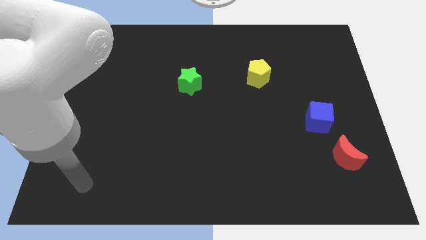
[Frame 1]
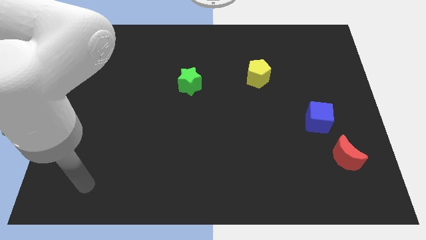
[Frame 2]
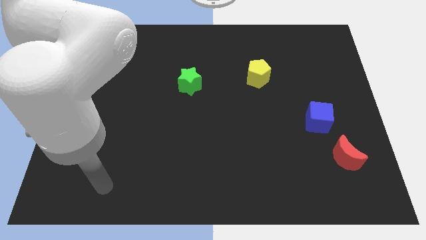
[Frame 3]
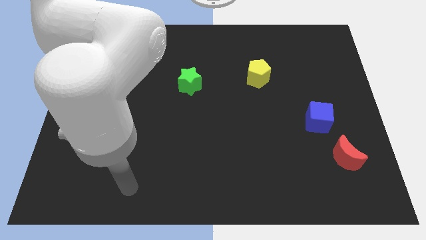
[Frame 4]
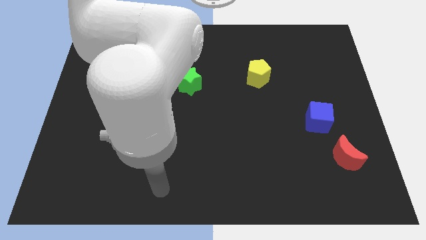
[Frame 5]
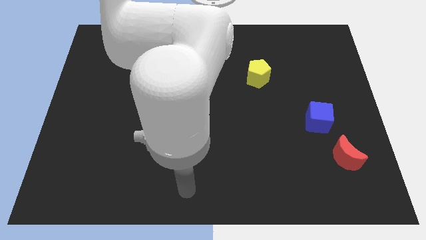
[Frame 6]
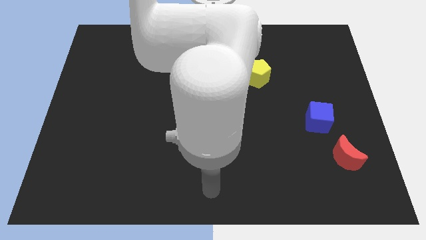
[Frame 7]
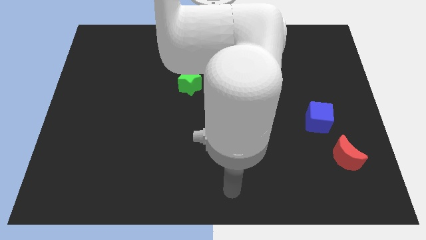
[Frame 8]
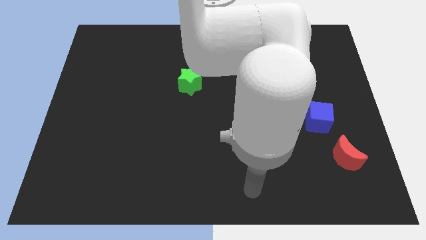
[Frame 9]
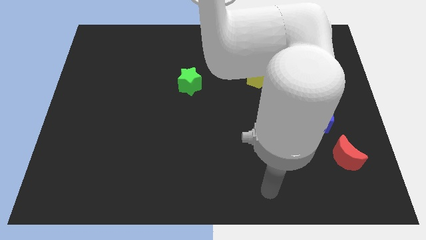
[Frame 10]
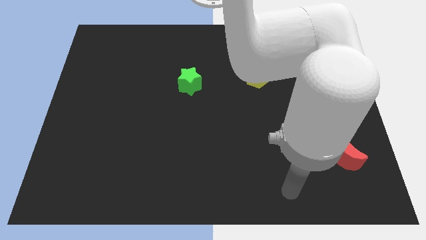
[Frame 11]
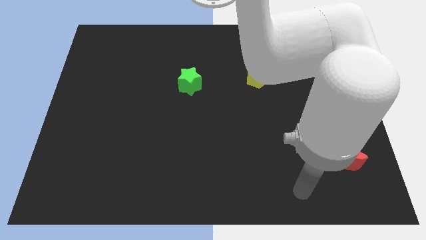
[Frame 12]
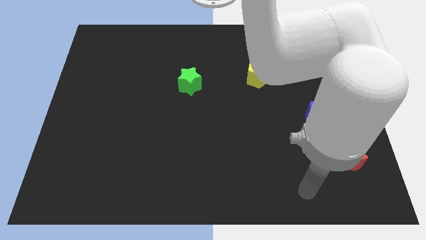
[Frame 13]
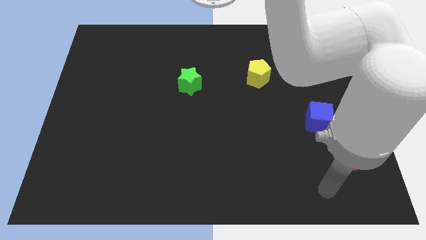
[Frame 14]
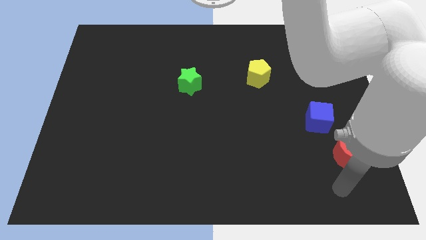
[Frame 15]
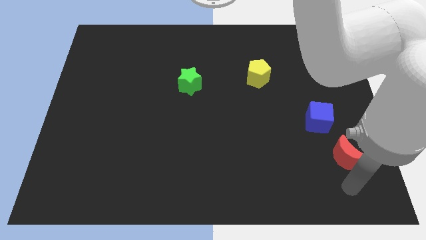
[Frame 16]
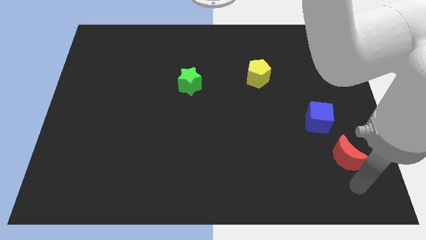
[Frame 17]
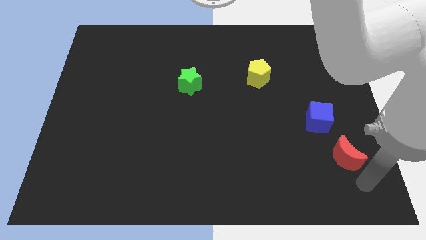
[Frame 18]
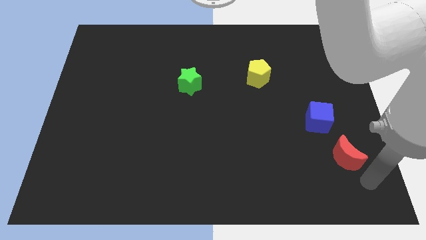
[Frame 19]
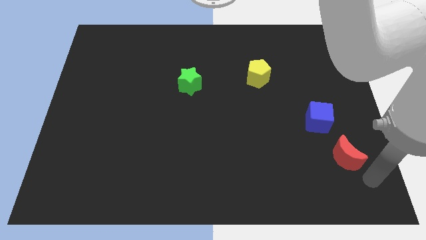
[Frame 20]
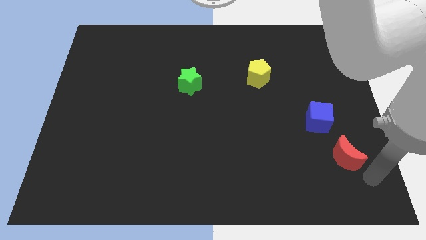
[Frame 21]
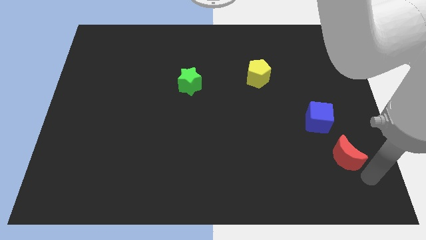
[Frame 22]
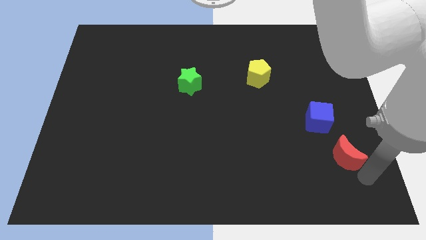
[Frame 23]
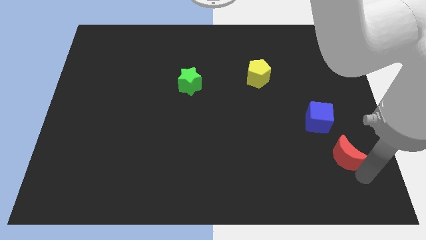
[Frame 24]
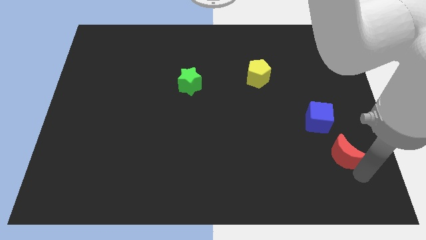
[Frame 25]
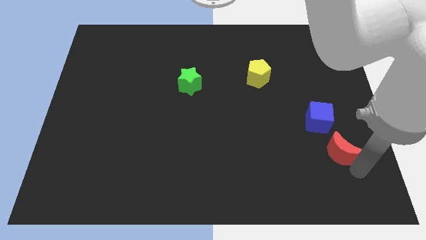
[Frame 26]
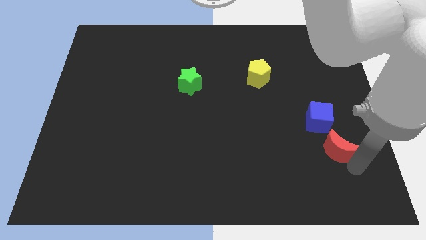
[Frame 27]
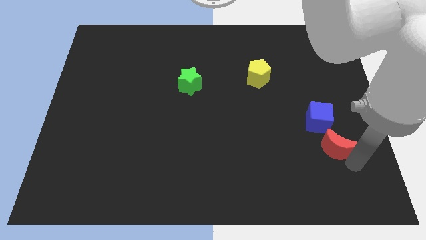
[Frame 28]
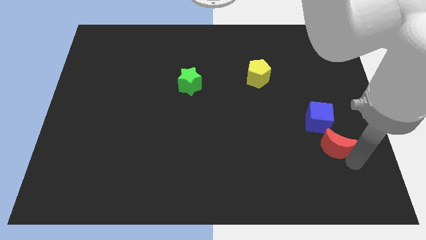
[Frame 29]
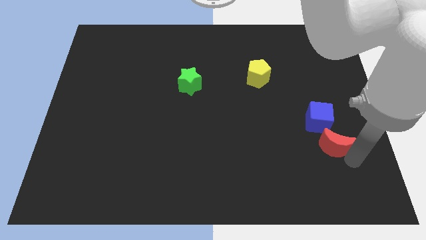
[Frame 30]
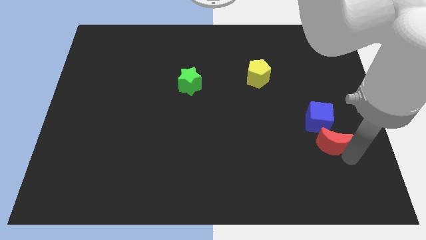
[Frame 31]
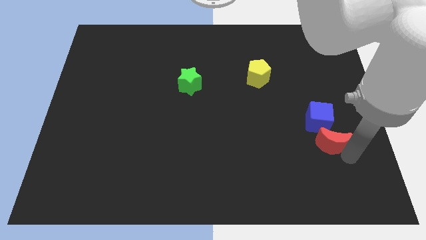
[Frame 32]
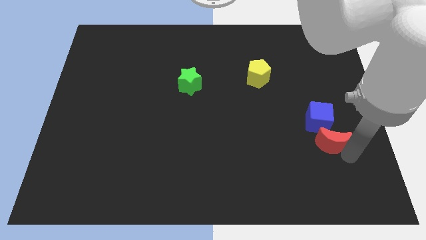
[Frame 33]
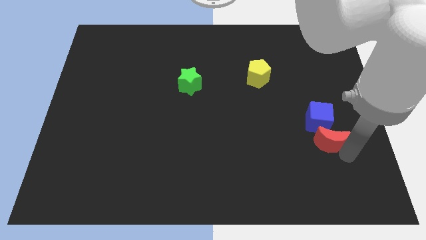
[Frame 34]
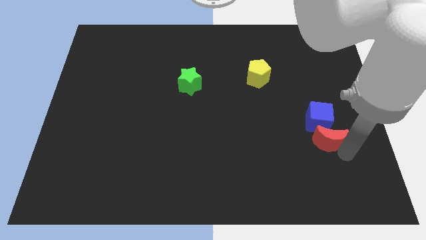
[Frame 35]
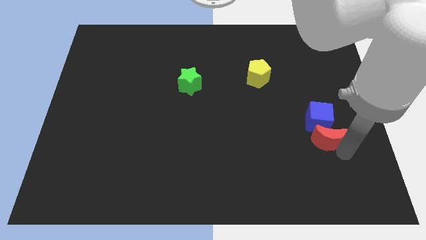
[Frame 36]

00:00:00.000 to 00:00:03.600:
move the moon next to the blue cube

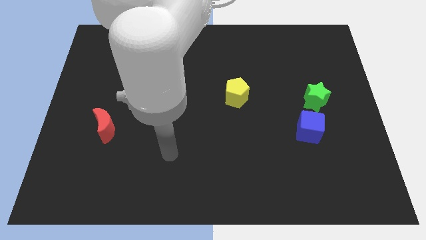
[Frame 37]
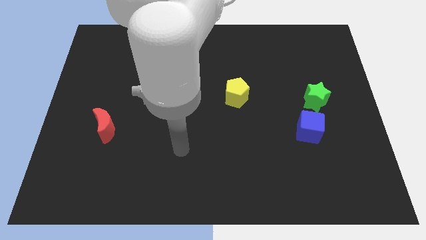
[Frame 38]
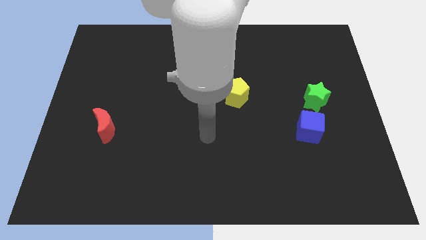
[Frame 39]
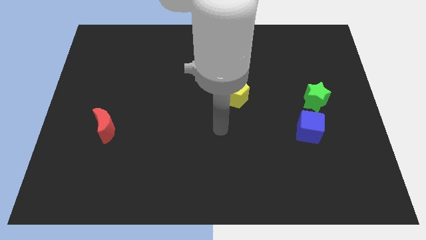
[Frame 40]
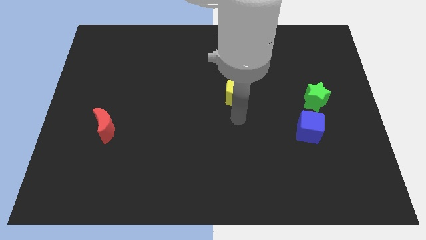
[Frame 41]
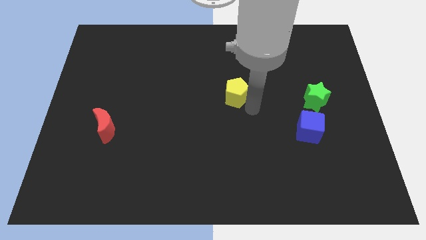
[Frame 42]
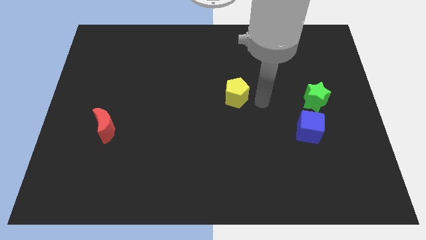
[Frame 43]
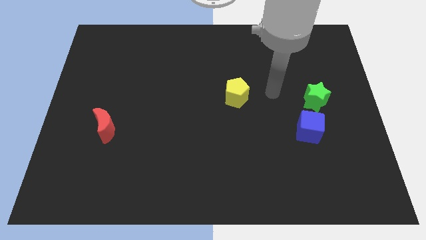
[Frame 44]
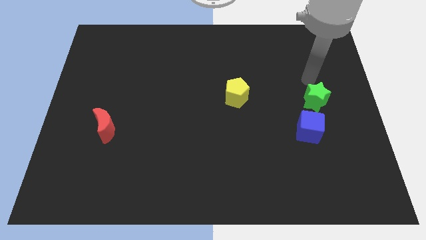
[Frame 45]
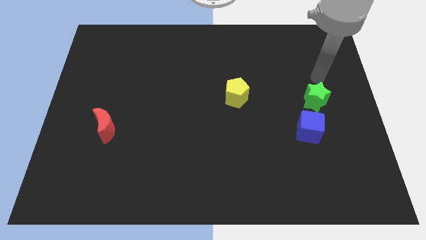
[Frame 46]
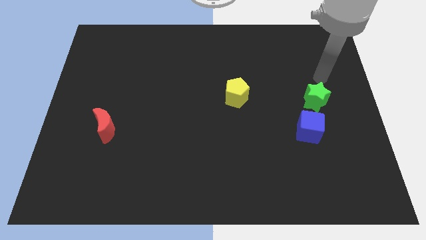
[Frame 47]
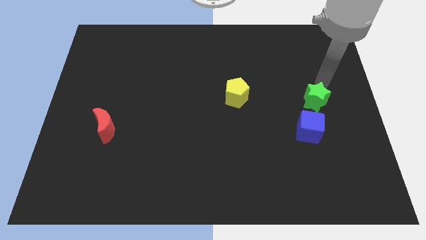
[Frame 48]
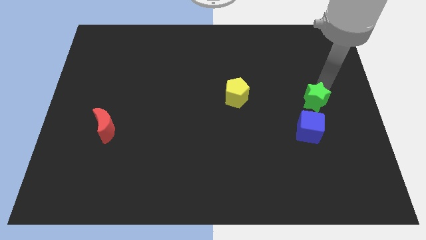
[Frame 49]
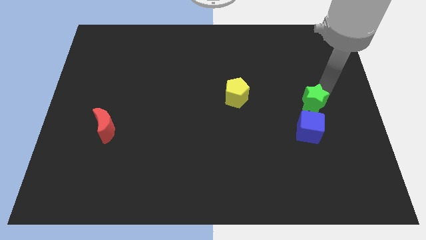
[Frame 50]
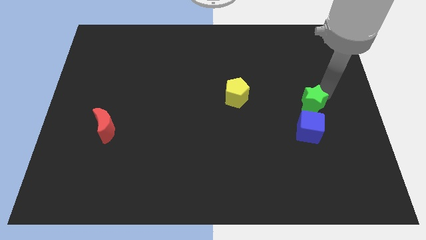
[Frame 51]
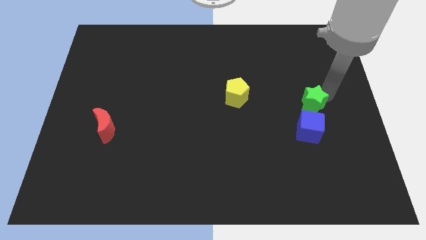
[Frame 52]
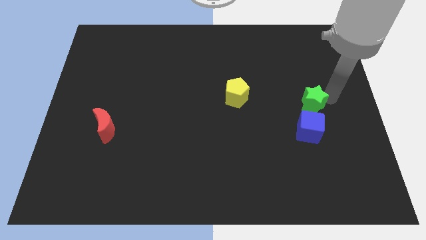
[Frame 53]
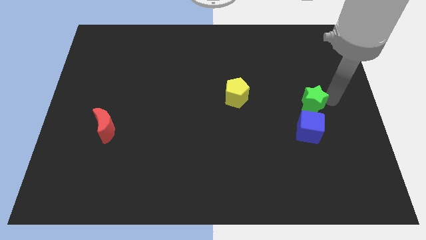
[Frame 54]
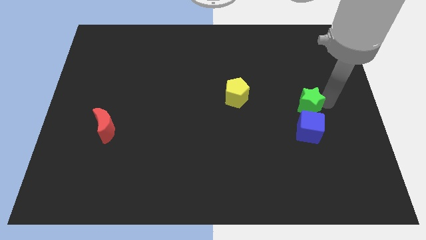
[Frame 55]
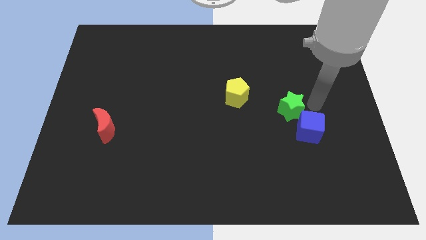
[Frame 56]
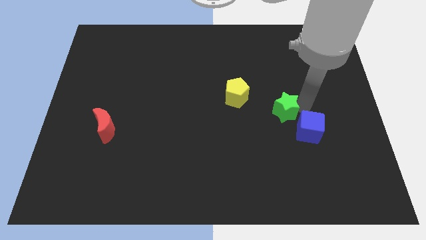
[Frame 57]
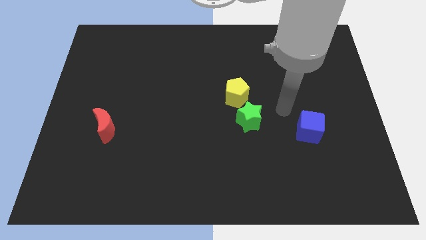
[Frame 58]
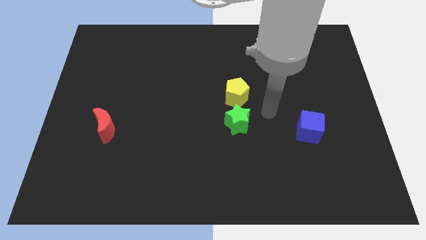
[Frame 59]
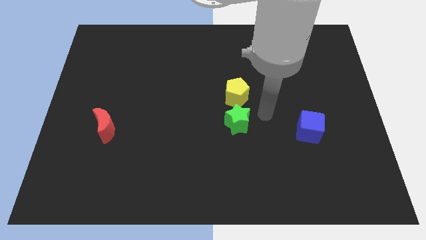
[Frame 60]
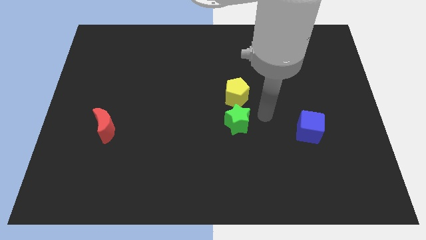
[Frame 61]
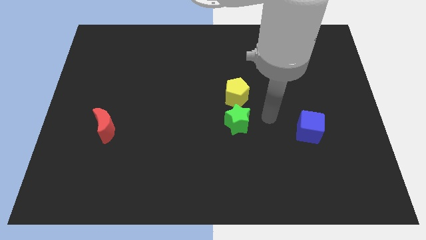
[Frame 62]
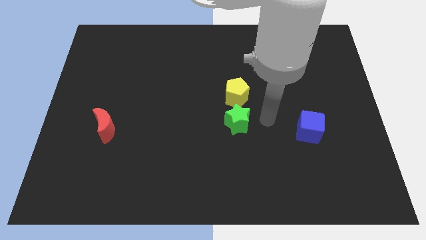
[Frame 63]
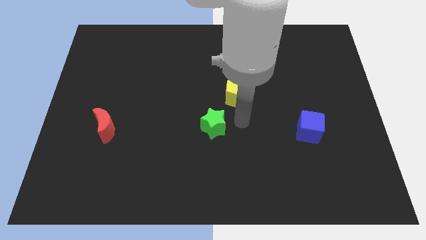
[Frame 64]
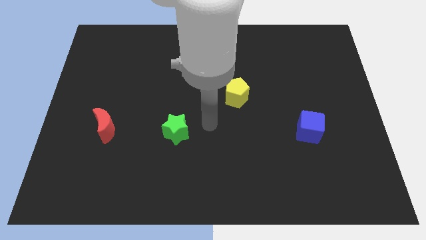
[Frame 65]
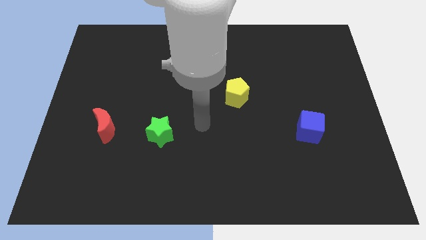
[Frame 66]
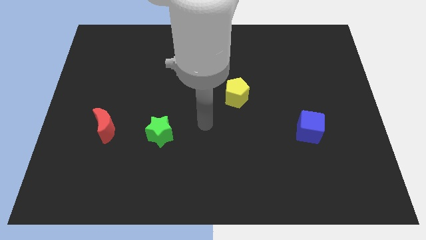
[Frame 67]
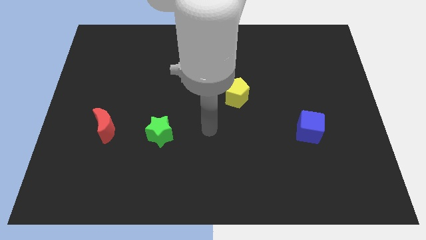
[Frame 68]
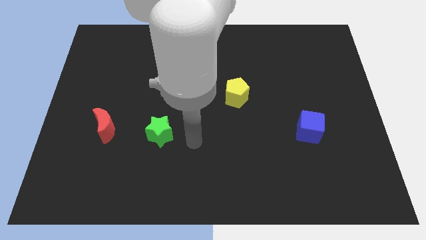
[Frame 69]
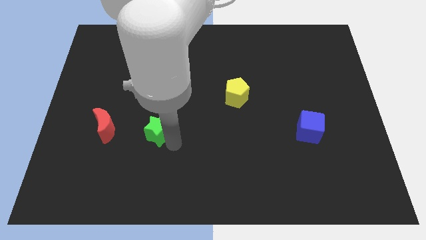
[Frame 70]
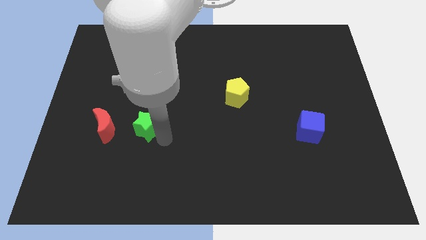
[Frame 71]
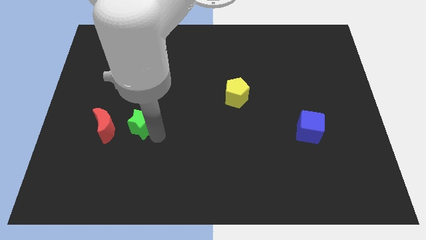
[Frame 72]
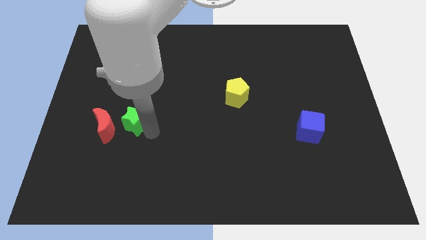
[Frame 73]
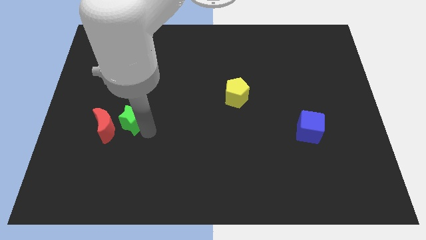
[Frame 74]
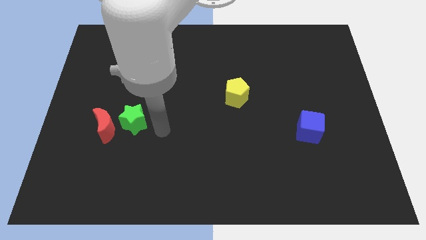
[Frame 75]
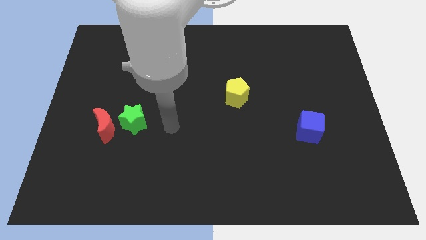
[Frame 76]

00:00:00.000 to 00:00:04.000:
push the green block next to the red block

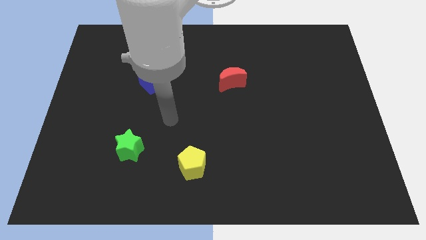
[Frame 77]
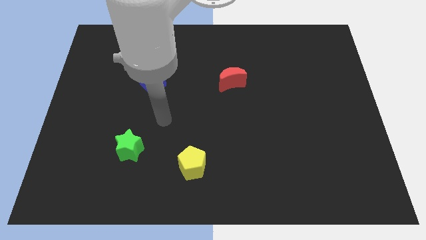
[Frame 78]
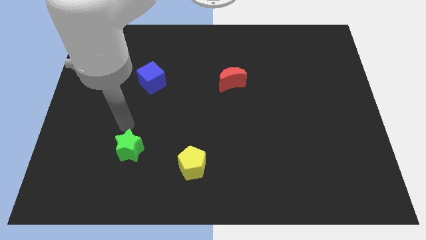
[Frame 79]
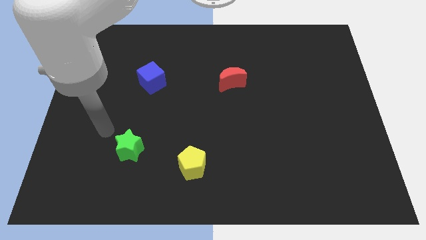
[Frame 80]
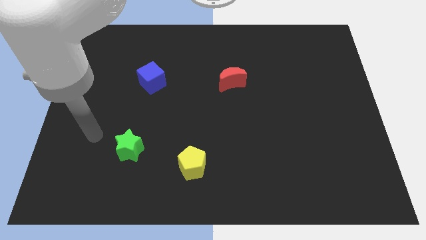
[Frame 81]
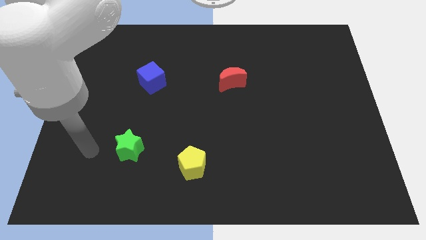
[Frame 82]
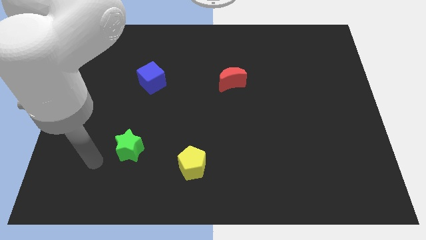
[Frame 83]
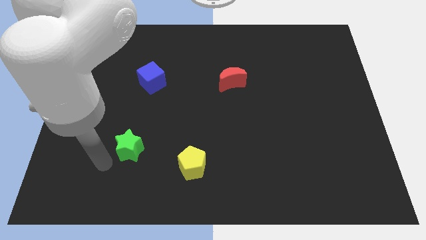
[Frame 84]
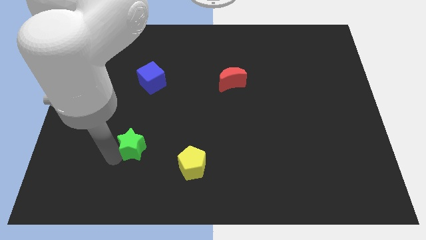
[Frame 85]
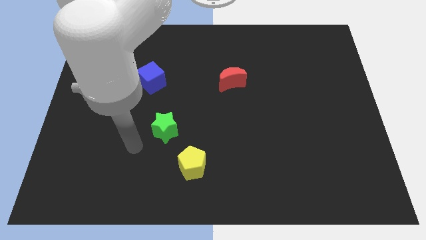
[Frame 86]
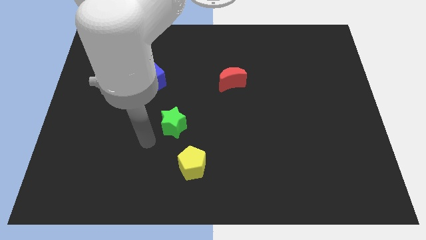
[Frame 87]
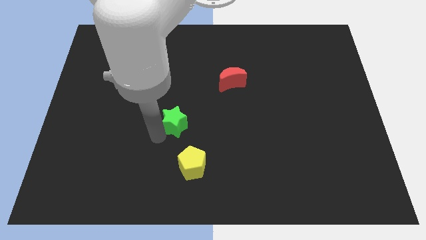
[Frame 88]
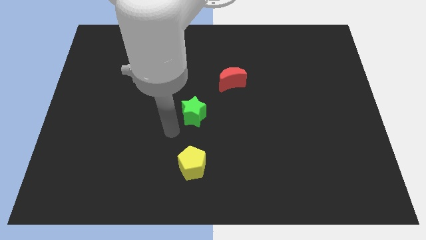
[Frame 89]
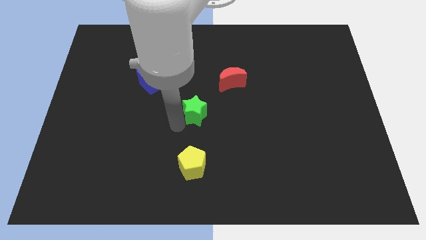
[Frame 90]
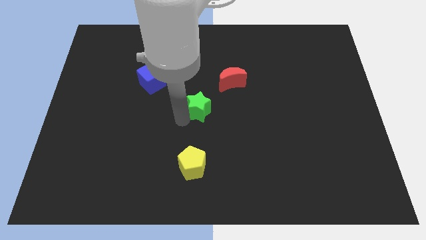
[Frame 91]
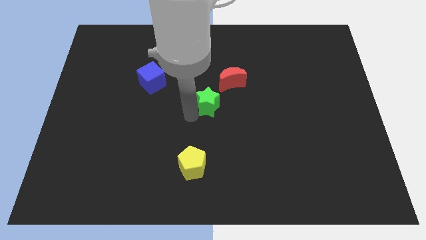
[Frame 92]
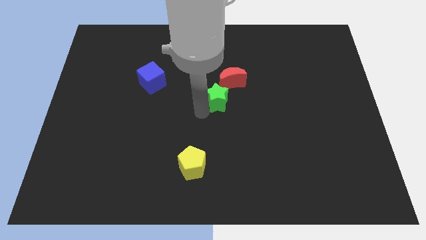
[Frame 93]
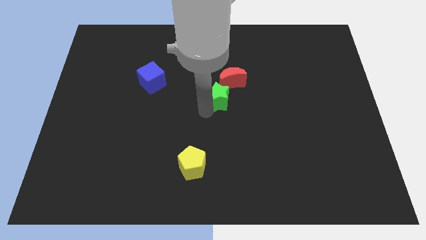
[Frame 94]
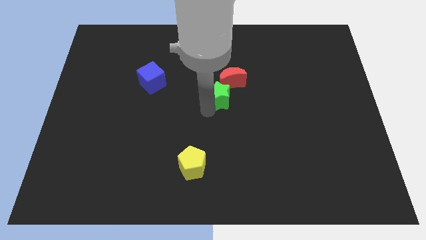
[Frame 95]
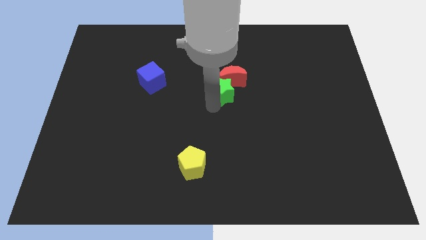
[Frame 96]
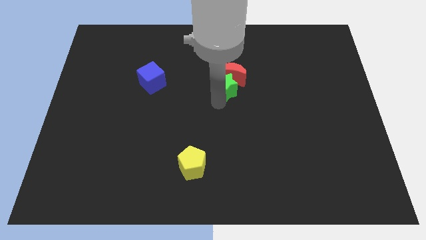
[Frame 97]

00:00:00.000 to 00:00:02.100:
slide the green star towards the moon
